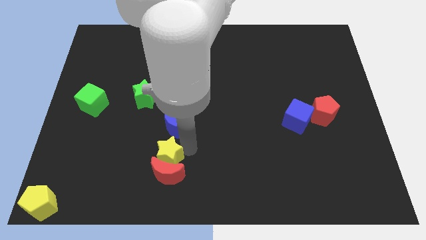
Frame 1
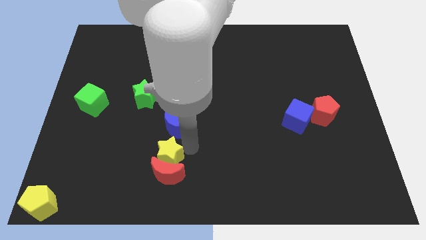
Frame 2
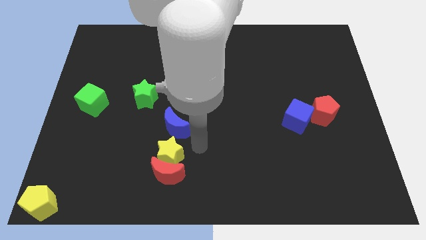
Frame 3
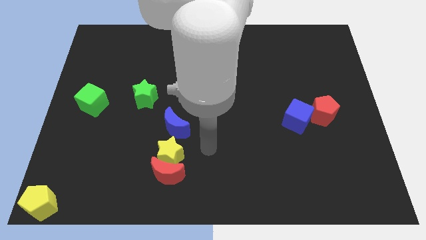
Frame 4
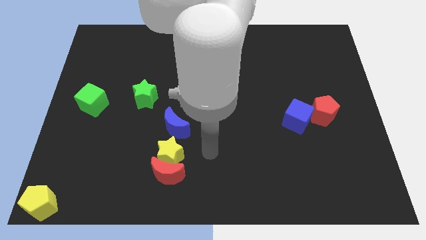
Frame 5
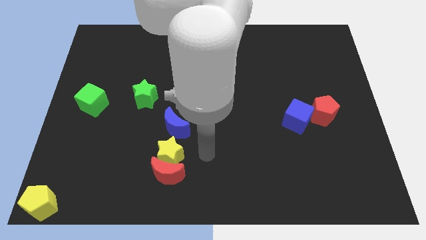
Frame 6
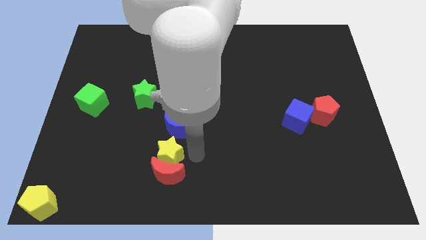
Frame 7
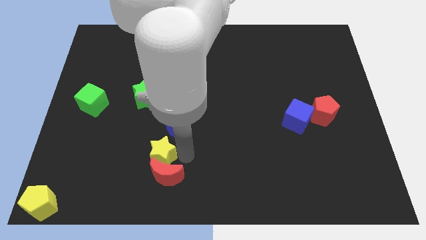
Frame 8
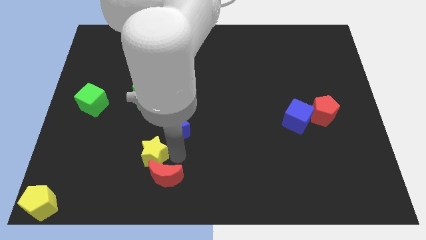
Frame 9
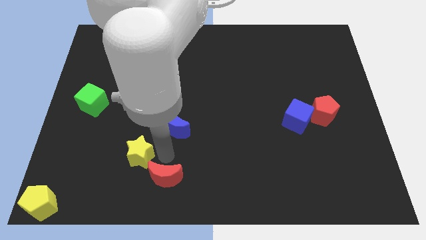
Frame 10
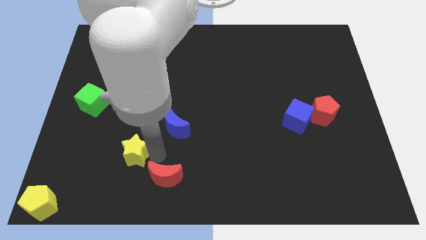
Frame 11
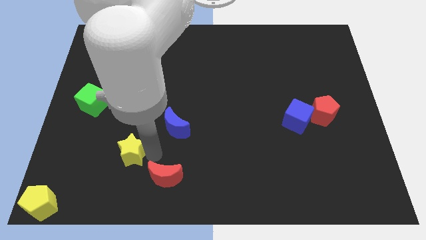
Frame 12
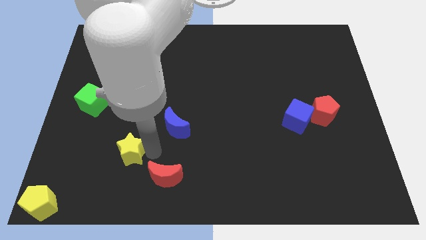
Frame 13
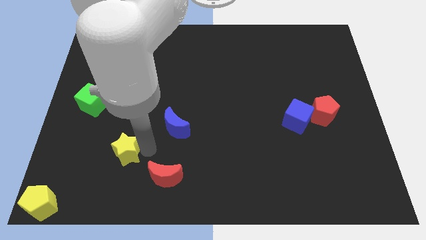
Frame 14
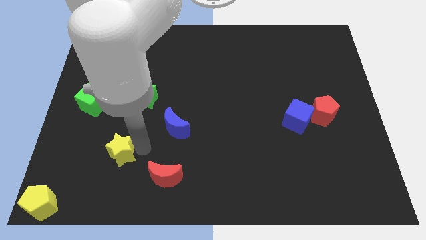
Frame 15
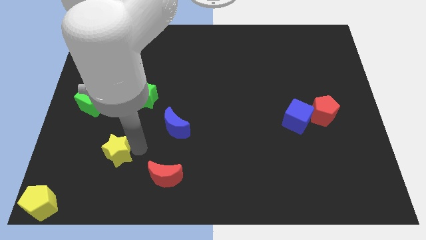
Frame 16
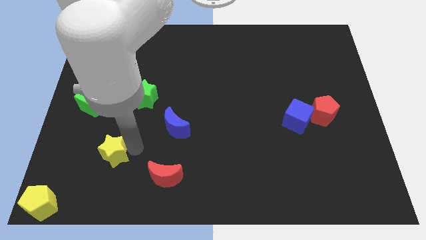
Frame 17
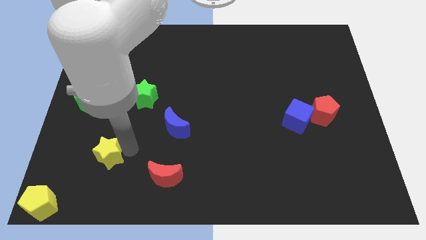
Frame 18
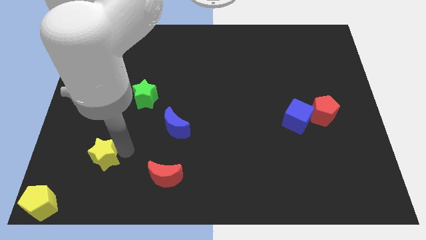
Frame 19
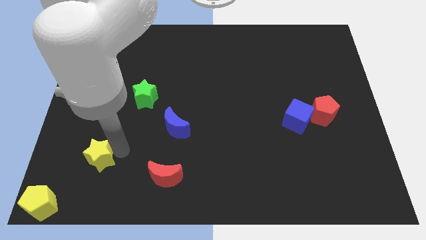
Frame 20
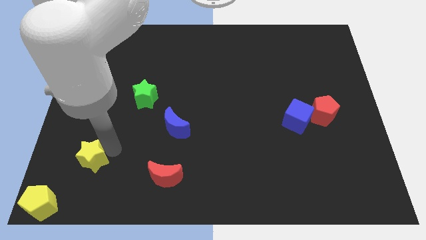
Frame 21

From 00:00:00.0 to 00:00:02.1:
separate the yellow star from the red moon

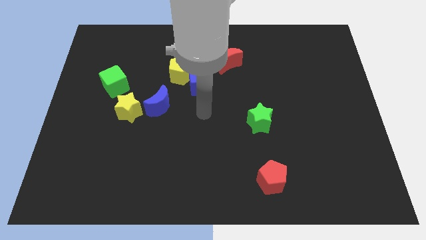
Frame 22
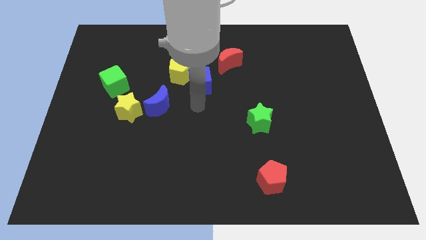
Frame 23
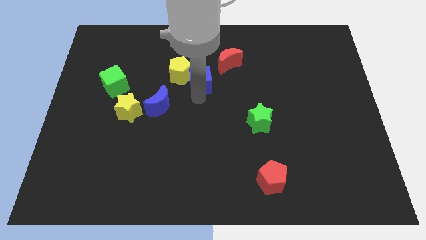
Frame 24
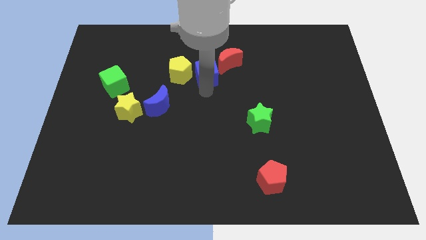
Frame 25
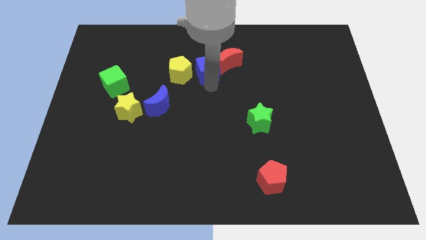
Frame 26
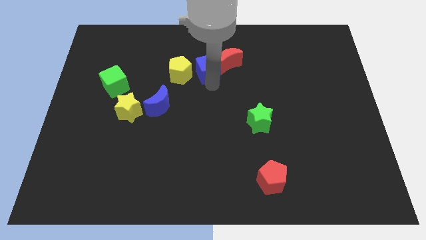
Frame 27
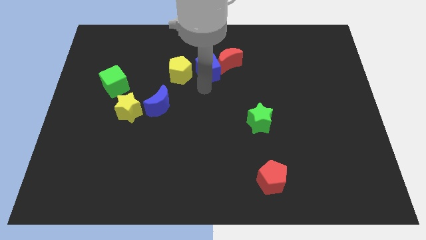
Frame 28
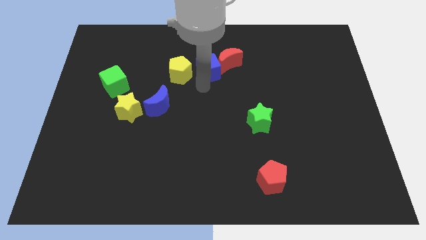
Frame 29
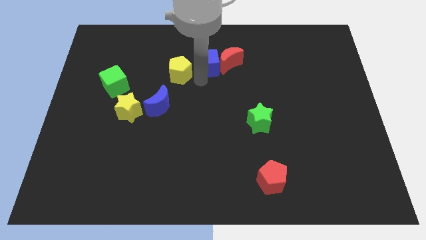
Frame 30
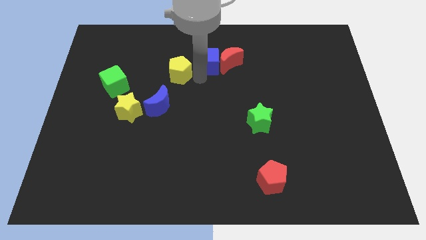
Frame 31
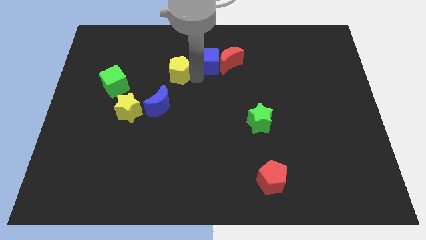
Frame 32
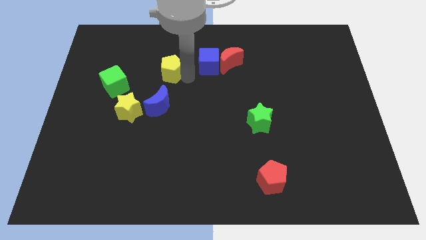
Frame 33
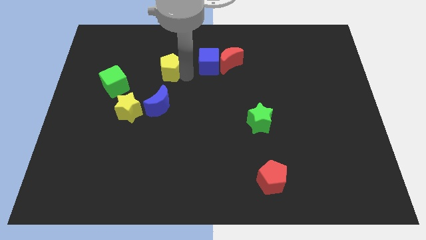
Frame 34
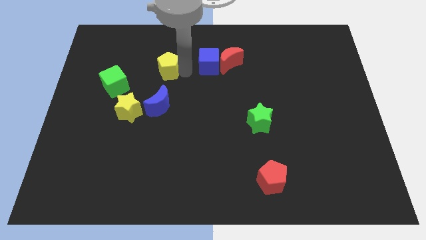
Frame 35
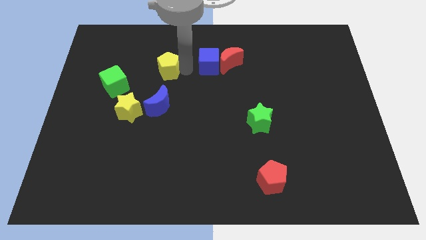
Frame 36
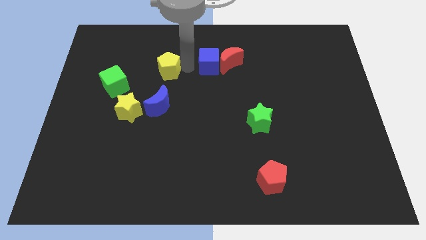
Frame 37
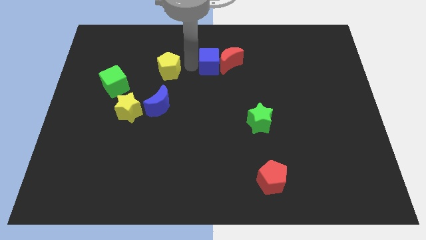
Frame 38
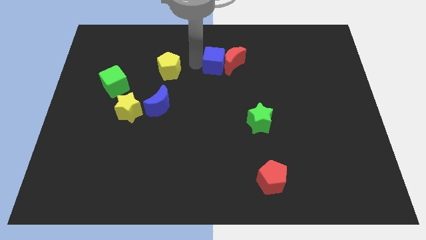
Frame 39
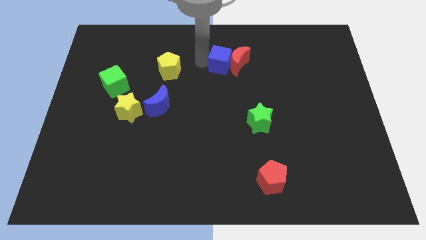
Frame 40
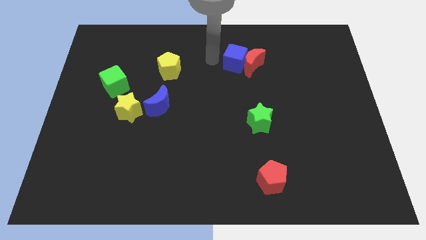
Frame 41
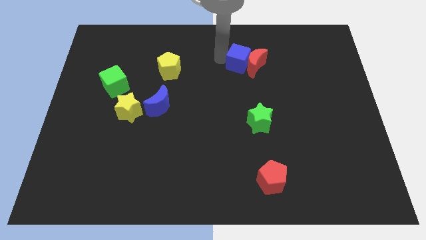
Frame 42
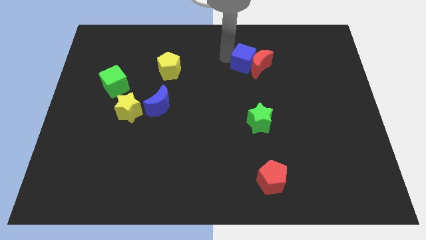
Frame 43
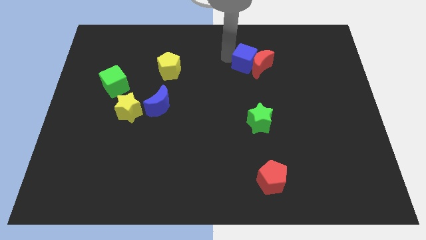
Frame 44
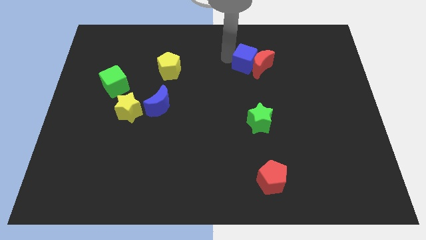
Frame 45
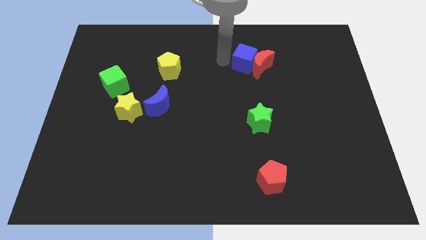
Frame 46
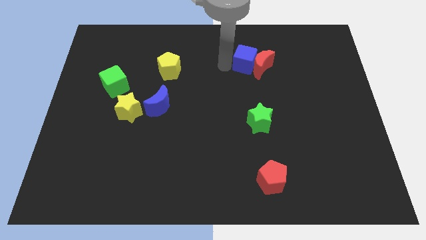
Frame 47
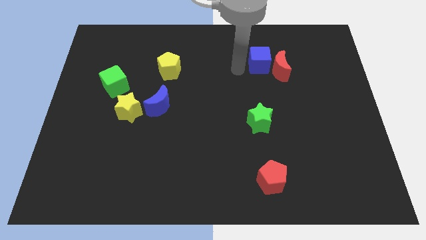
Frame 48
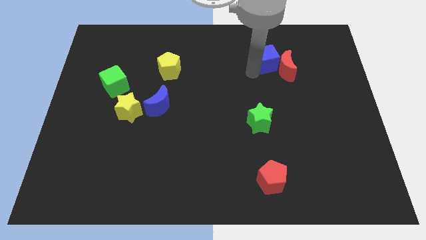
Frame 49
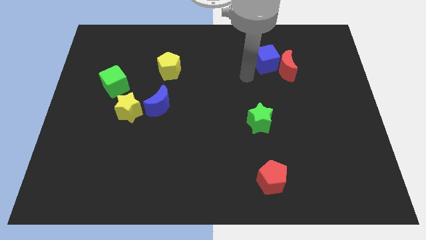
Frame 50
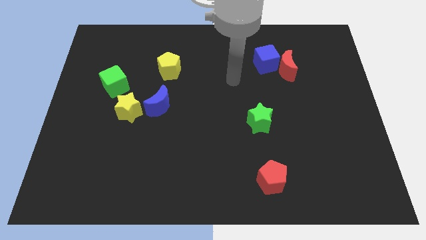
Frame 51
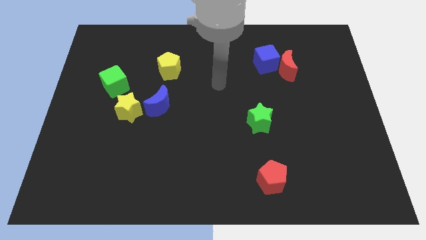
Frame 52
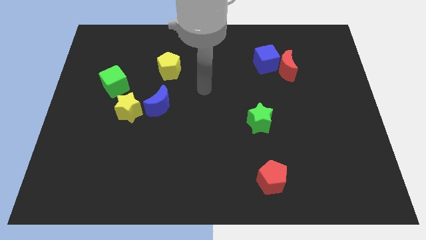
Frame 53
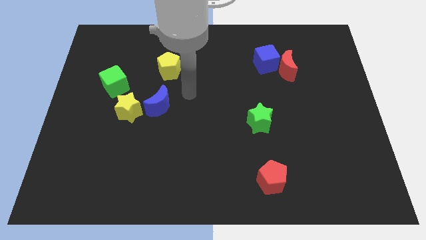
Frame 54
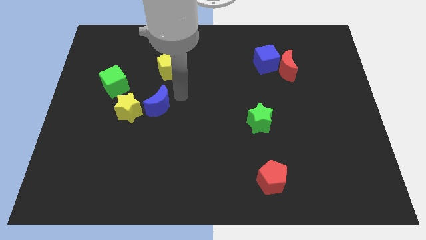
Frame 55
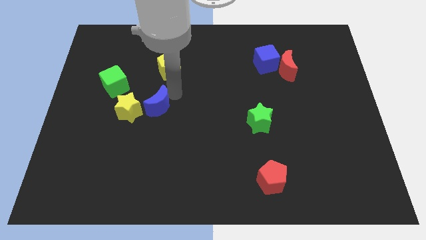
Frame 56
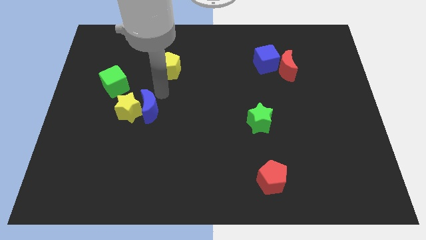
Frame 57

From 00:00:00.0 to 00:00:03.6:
push the blue cube and red moon to the right side of the board

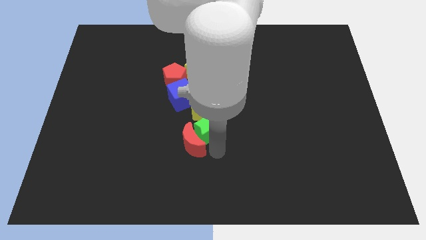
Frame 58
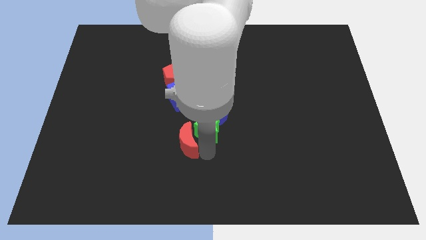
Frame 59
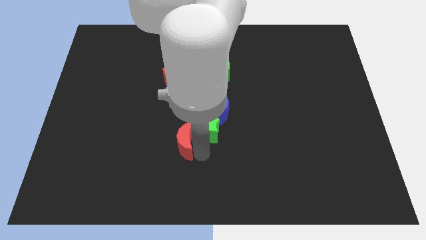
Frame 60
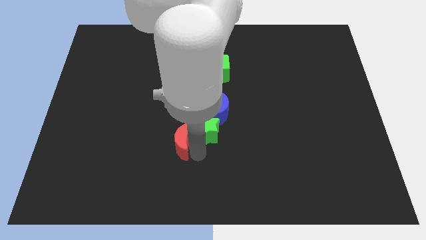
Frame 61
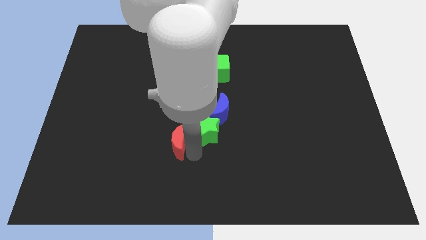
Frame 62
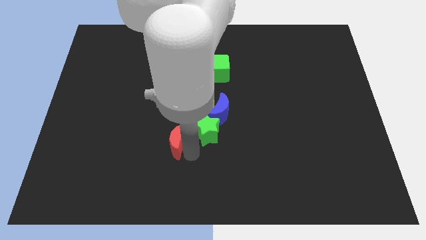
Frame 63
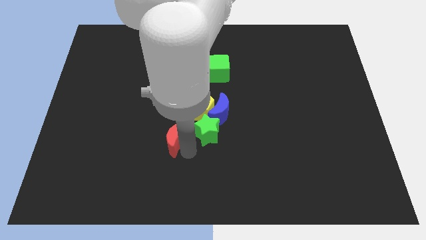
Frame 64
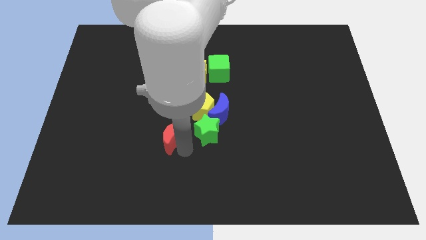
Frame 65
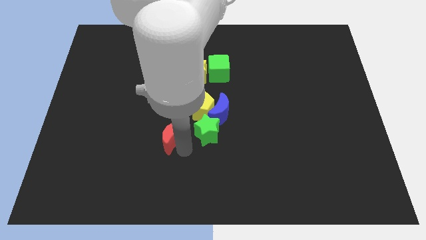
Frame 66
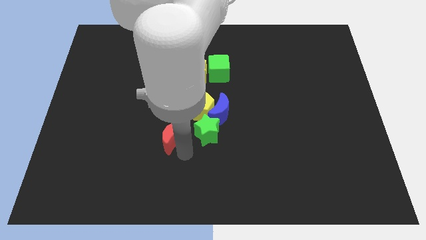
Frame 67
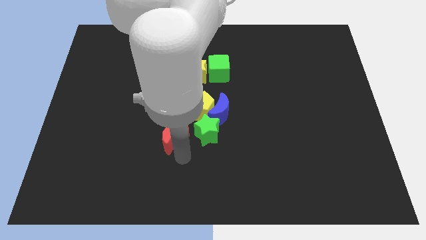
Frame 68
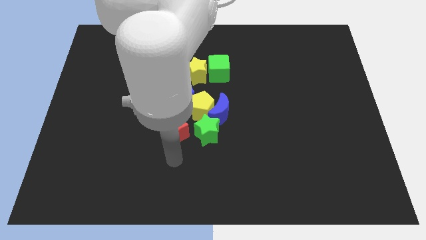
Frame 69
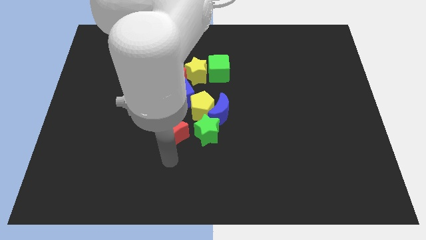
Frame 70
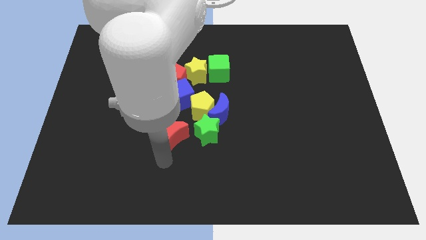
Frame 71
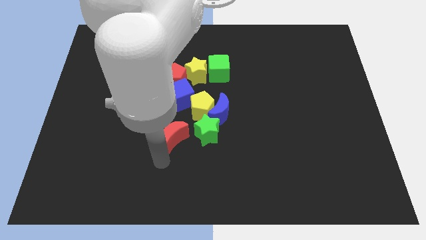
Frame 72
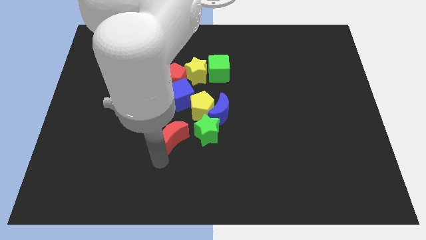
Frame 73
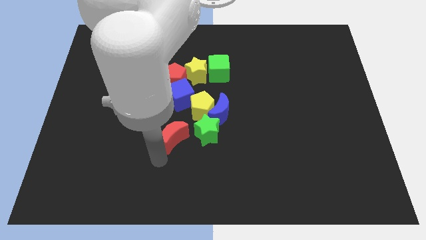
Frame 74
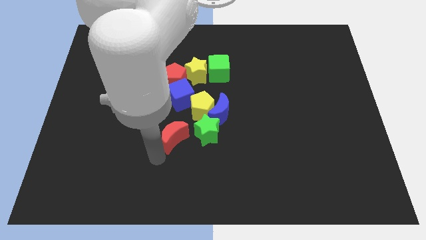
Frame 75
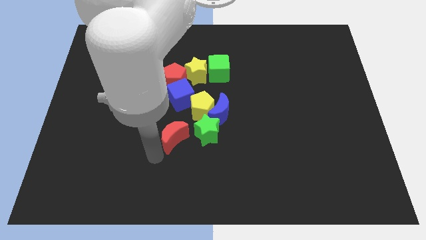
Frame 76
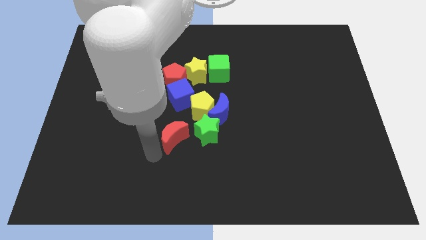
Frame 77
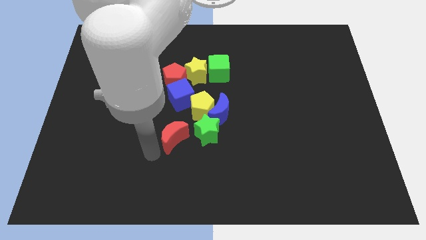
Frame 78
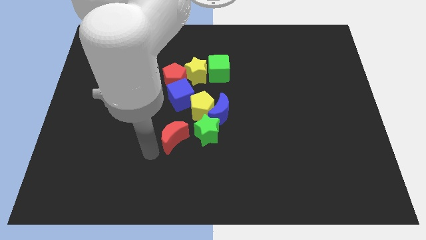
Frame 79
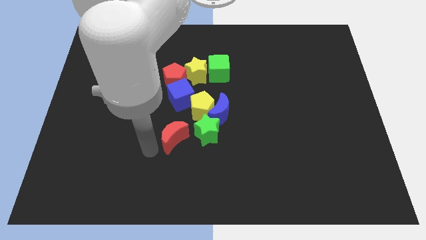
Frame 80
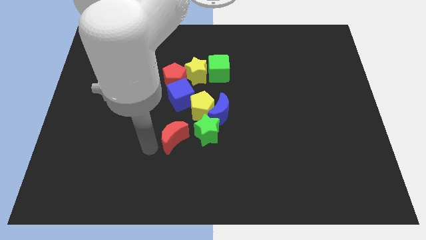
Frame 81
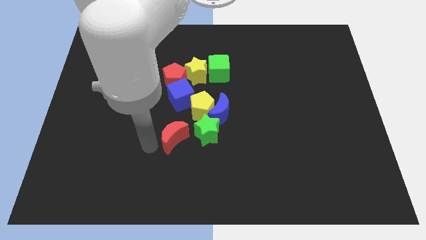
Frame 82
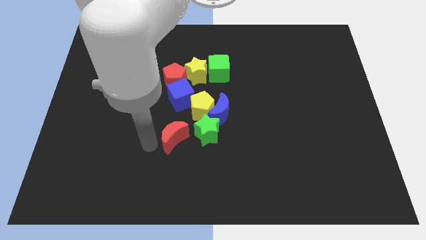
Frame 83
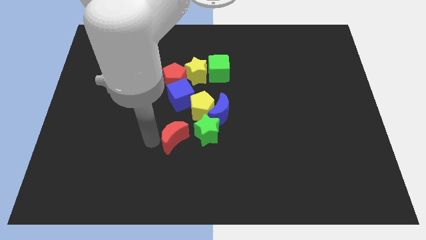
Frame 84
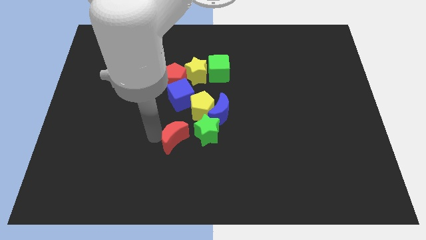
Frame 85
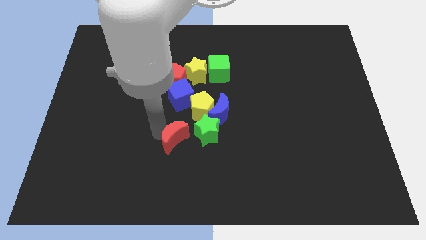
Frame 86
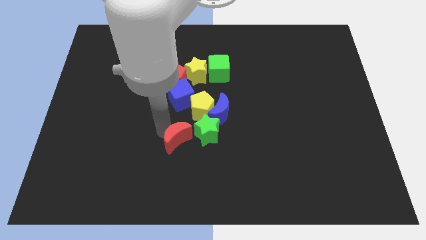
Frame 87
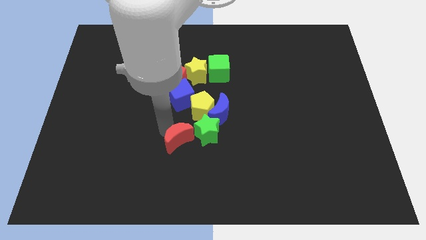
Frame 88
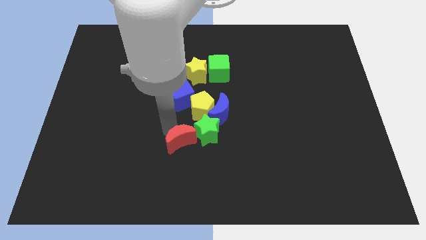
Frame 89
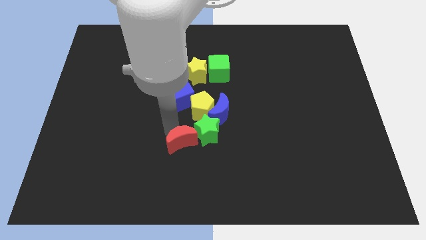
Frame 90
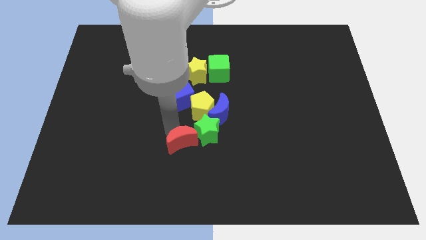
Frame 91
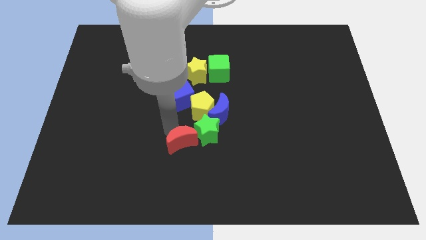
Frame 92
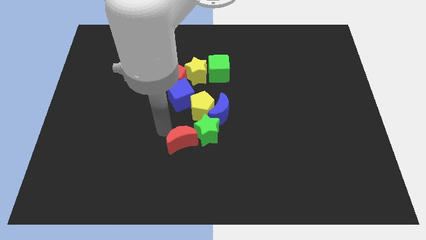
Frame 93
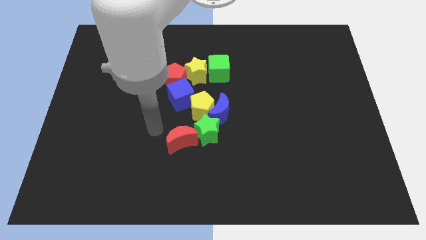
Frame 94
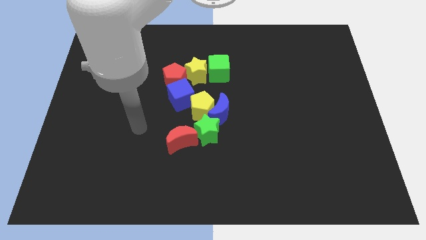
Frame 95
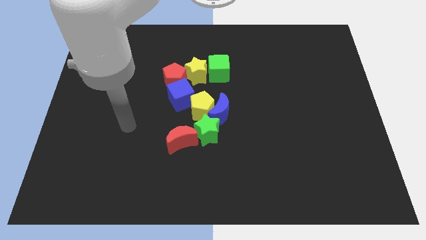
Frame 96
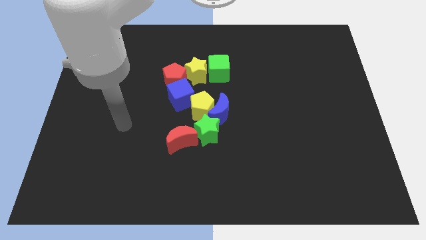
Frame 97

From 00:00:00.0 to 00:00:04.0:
put the red crescent to the left of the green star
